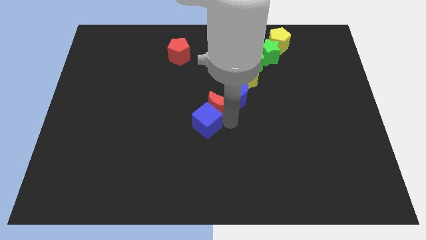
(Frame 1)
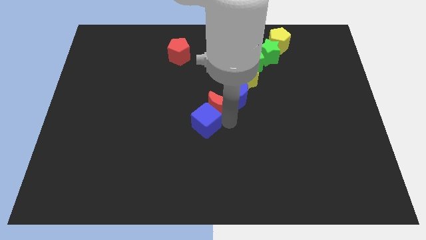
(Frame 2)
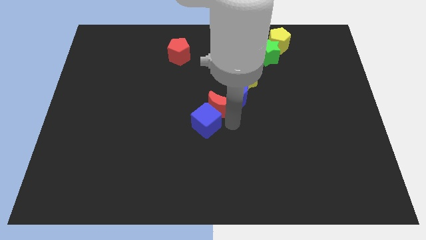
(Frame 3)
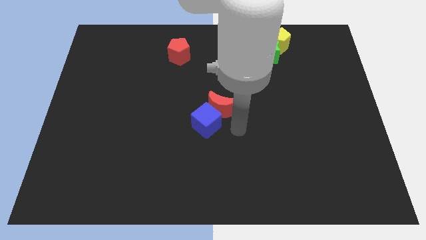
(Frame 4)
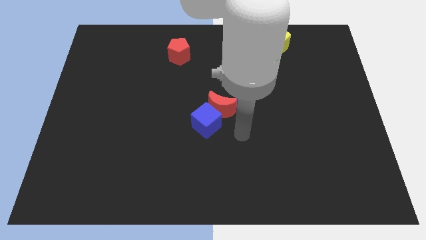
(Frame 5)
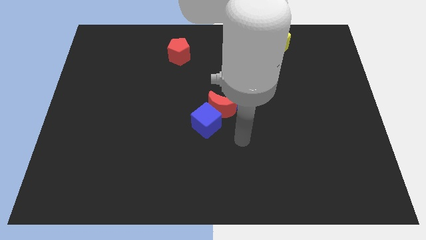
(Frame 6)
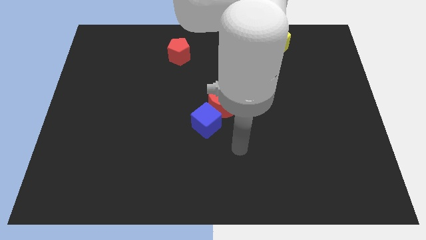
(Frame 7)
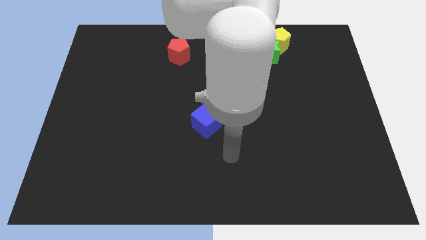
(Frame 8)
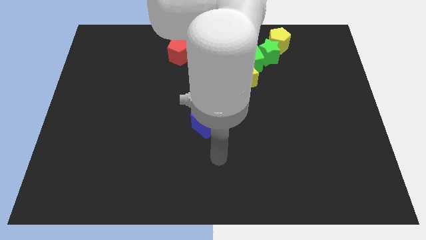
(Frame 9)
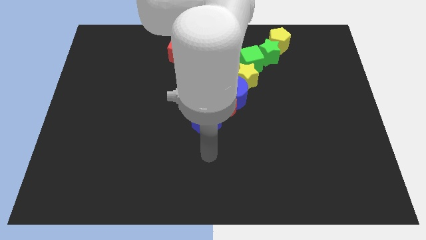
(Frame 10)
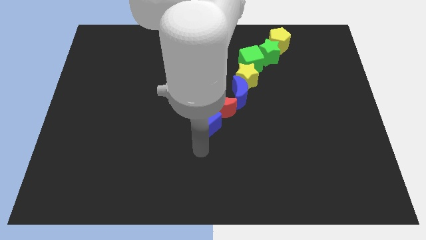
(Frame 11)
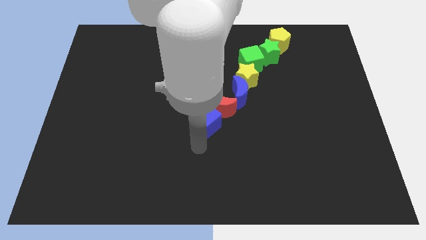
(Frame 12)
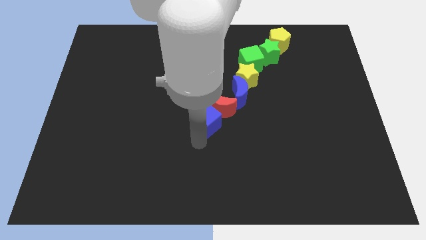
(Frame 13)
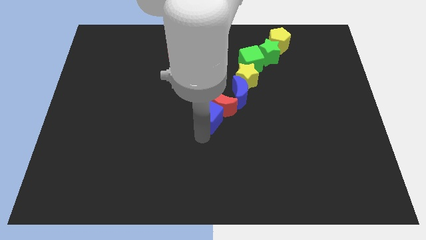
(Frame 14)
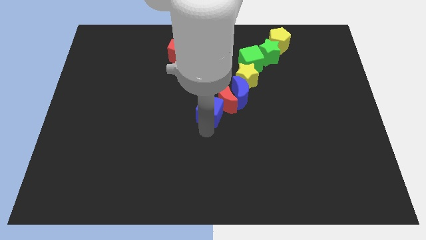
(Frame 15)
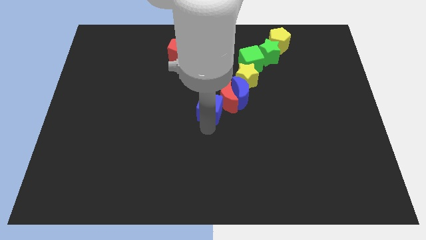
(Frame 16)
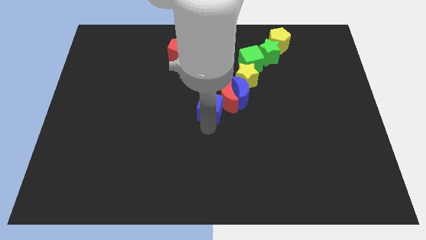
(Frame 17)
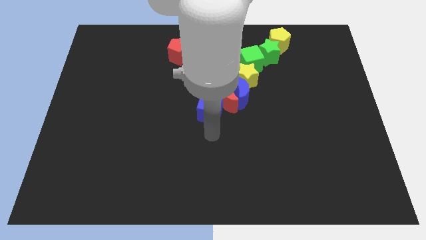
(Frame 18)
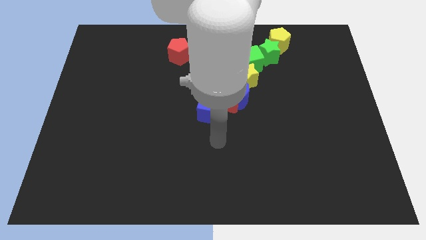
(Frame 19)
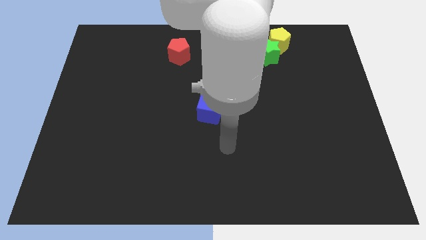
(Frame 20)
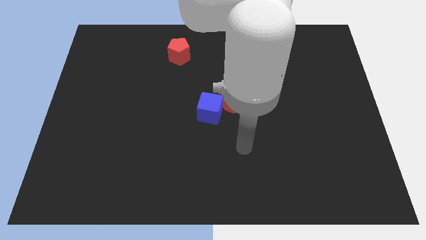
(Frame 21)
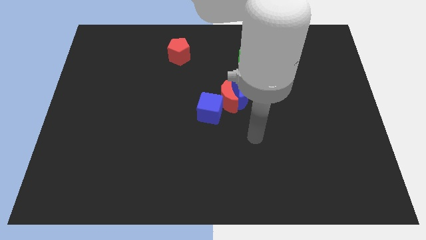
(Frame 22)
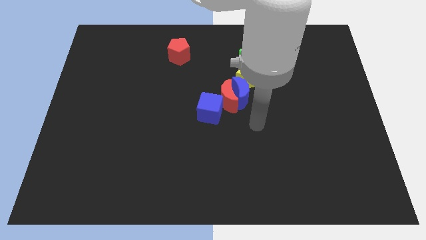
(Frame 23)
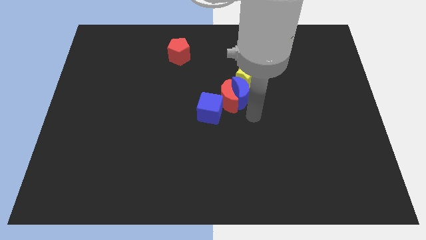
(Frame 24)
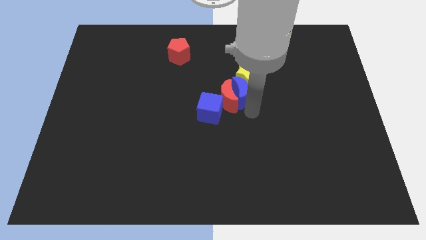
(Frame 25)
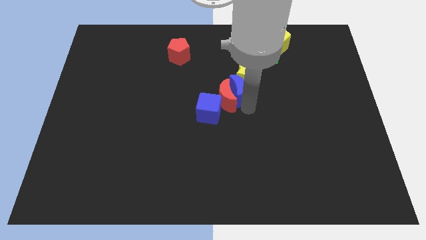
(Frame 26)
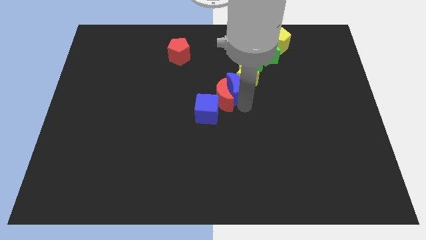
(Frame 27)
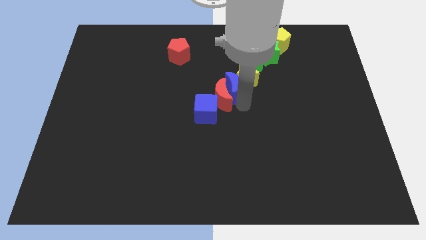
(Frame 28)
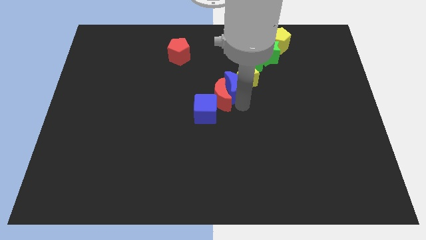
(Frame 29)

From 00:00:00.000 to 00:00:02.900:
push the blue cube into the red crescent

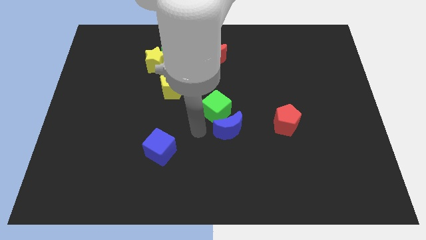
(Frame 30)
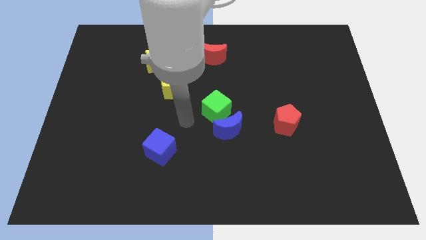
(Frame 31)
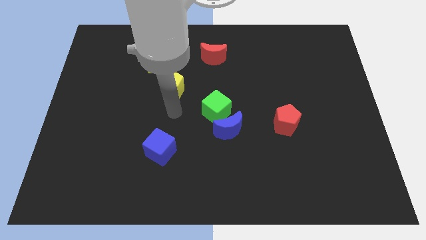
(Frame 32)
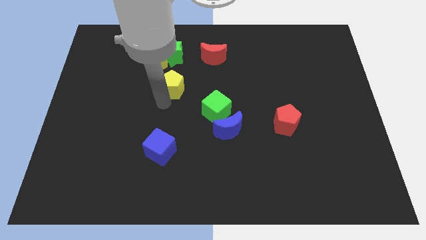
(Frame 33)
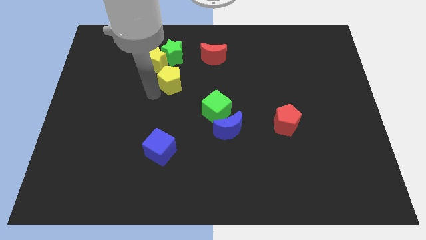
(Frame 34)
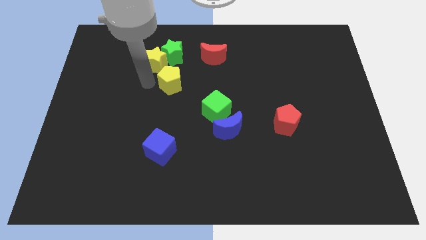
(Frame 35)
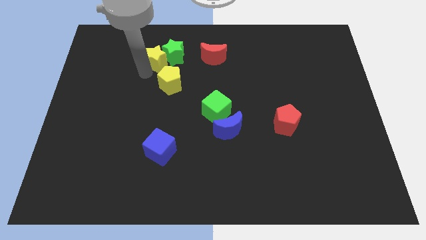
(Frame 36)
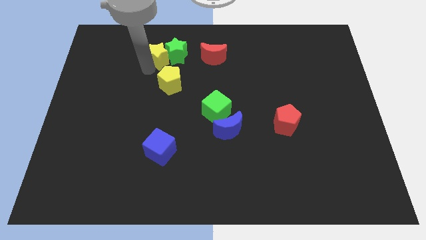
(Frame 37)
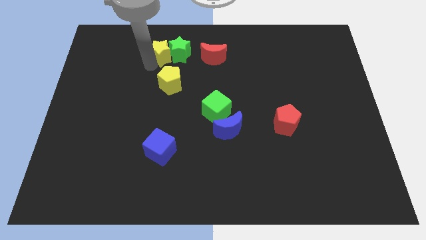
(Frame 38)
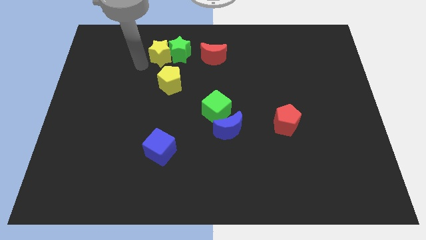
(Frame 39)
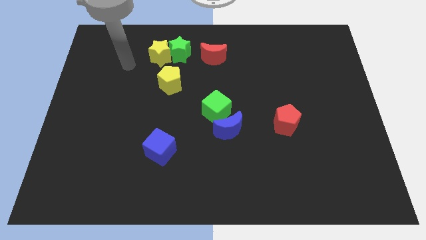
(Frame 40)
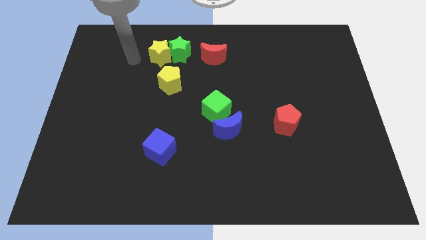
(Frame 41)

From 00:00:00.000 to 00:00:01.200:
move the group of stars slightly right

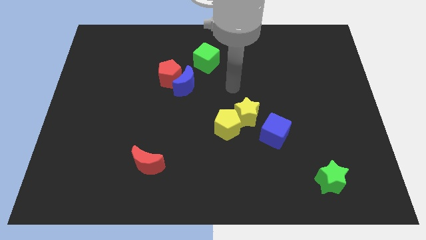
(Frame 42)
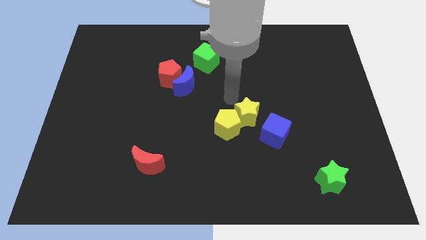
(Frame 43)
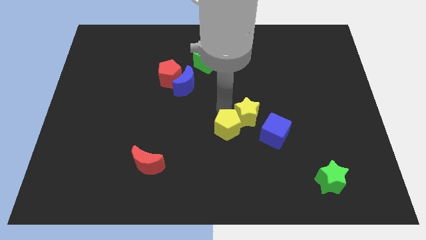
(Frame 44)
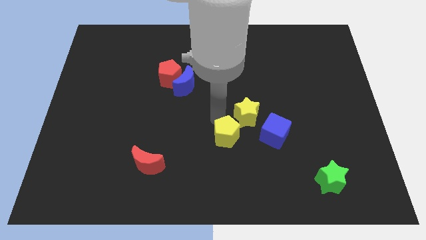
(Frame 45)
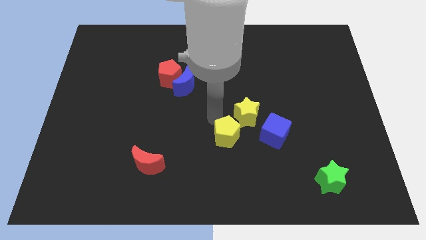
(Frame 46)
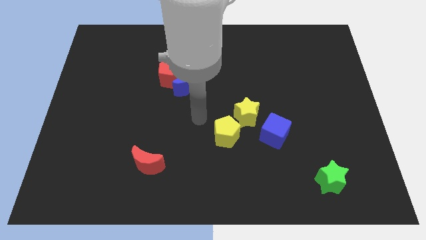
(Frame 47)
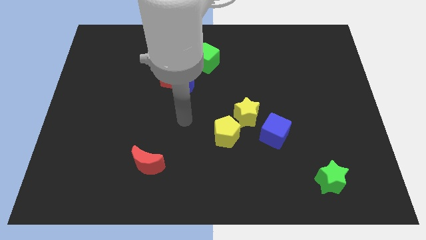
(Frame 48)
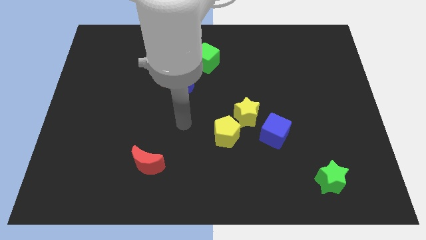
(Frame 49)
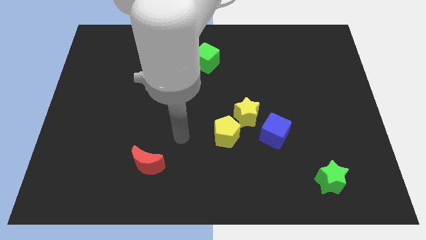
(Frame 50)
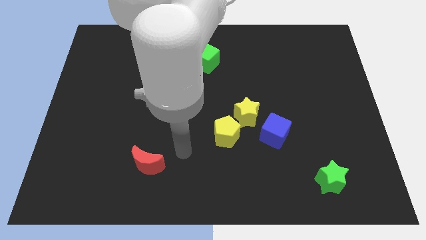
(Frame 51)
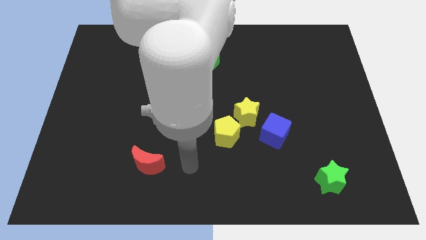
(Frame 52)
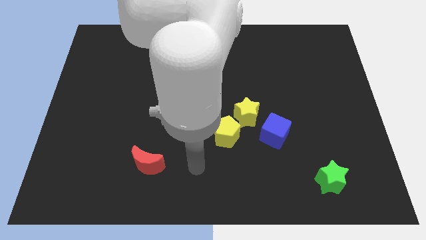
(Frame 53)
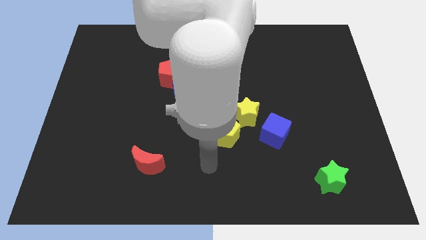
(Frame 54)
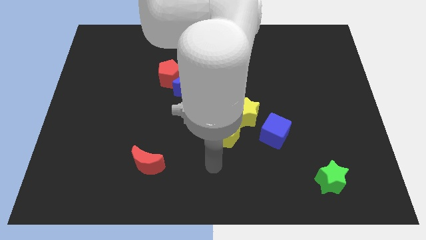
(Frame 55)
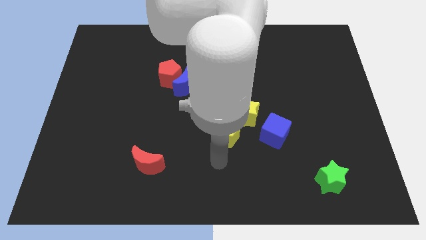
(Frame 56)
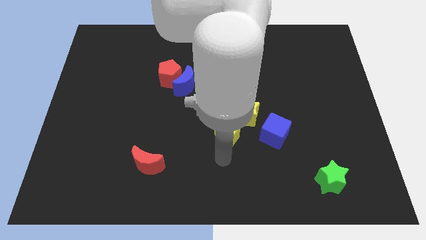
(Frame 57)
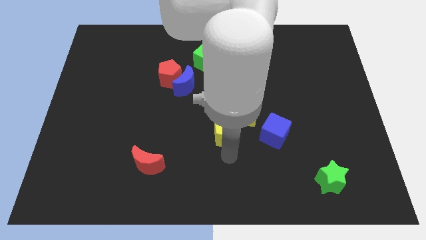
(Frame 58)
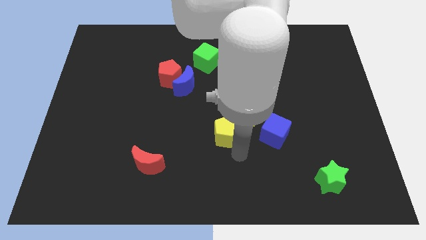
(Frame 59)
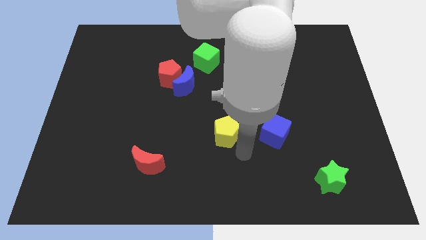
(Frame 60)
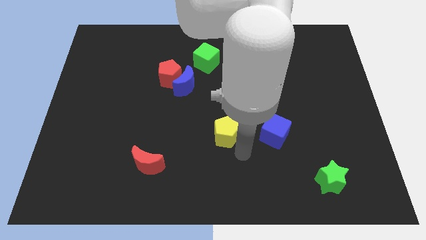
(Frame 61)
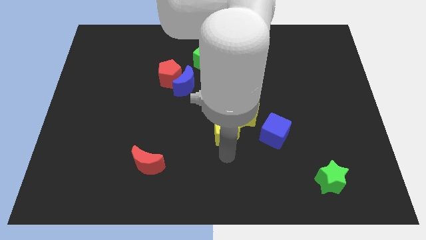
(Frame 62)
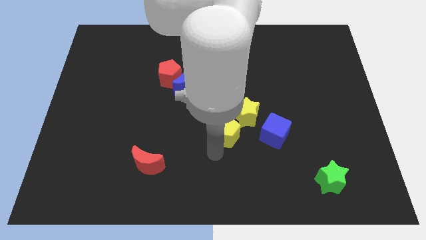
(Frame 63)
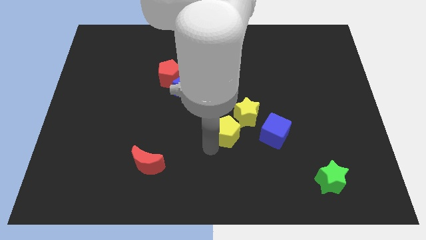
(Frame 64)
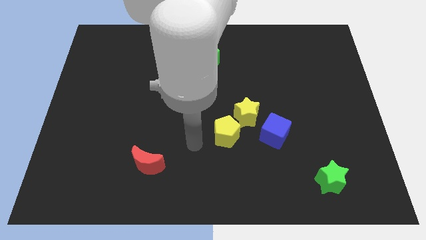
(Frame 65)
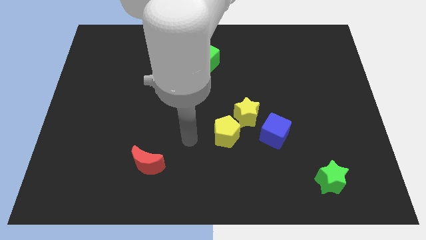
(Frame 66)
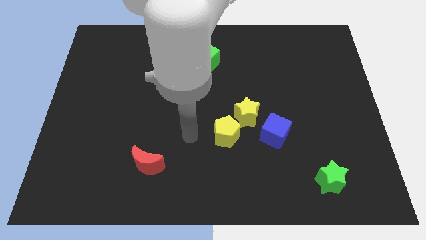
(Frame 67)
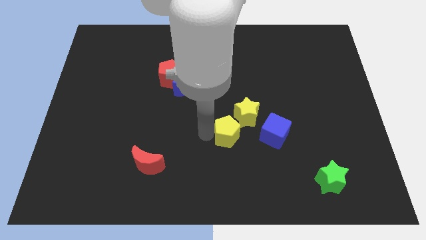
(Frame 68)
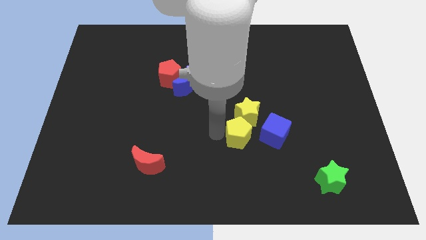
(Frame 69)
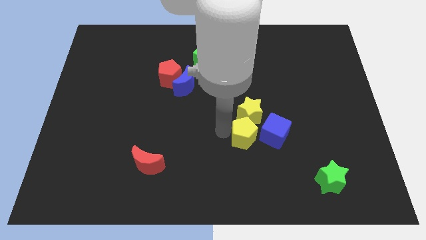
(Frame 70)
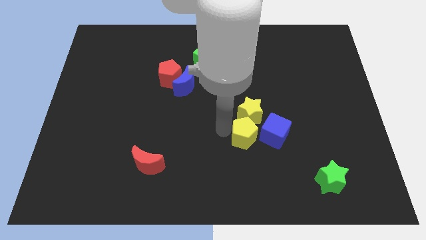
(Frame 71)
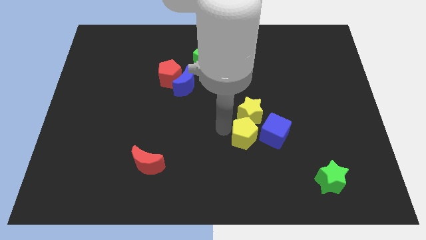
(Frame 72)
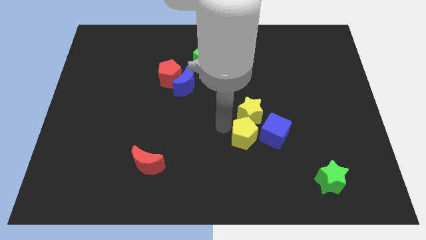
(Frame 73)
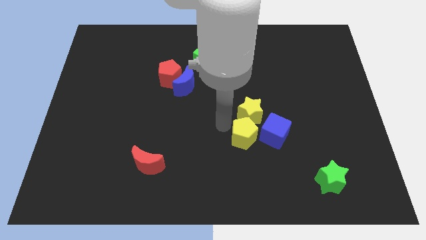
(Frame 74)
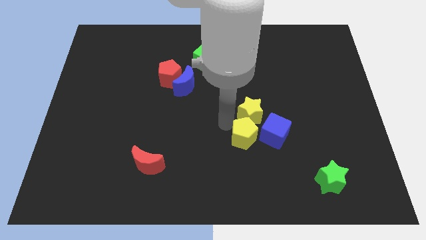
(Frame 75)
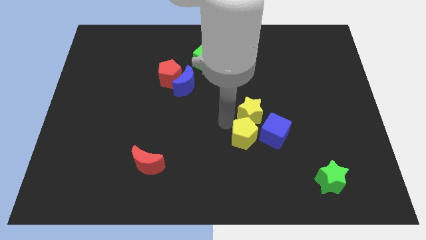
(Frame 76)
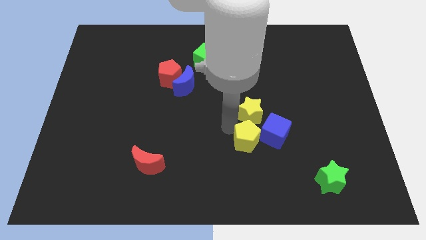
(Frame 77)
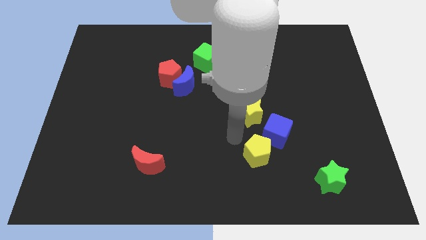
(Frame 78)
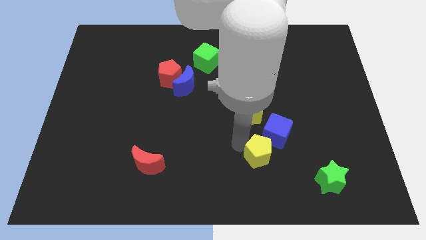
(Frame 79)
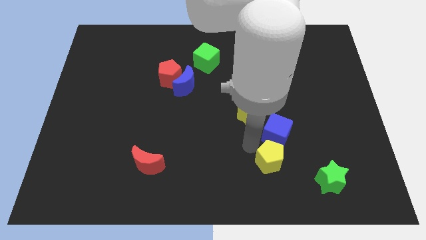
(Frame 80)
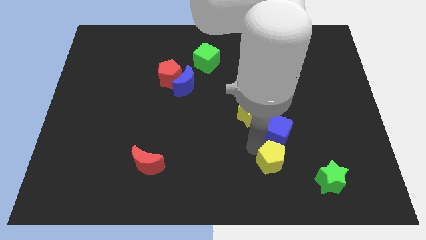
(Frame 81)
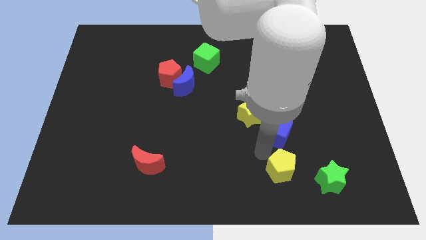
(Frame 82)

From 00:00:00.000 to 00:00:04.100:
separate the yellow pentagon from the yellow star

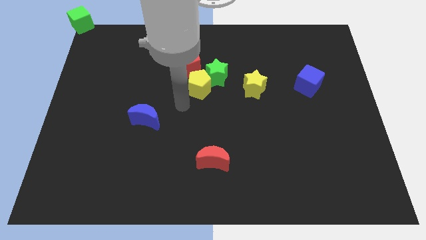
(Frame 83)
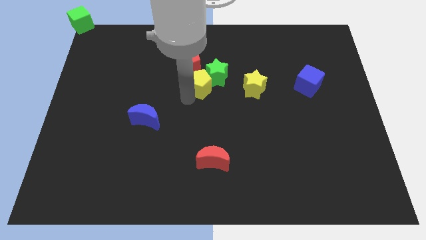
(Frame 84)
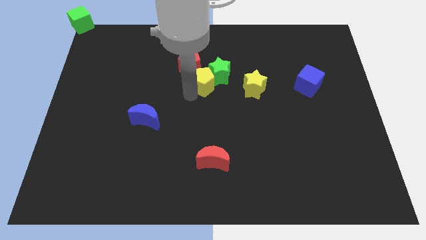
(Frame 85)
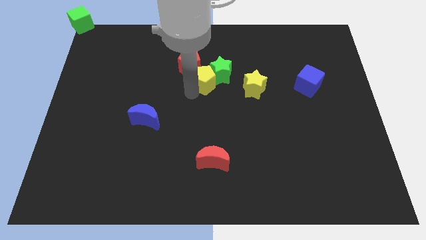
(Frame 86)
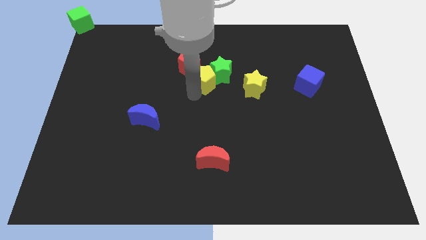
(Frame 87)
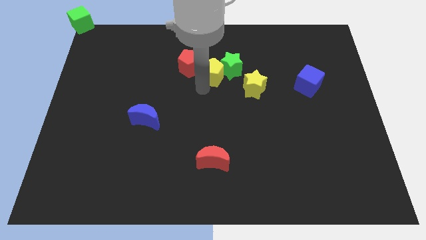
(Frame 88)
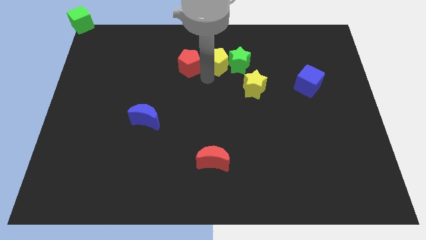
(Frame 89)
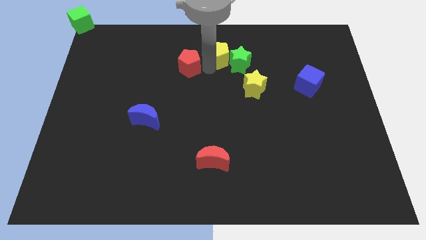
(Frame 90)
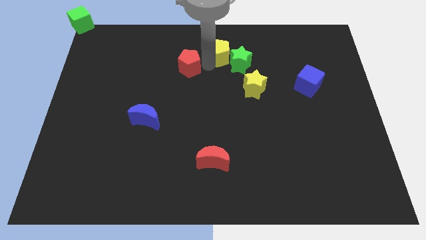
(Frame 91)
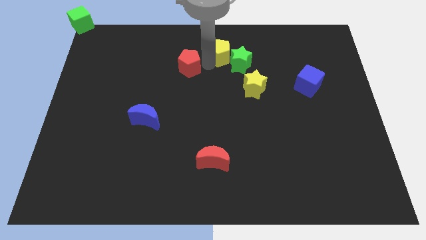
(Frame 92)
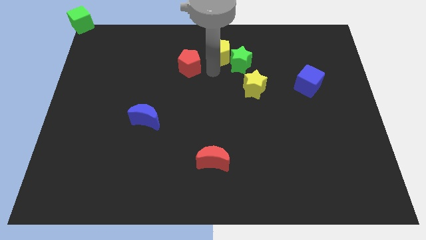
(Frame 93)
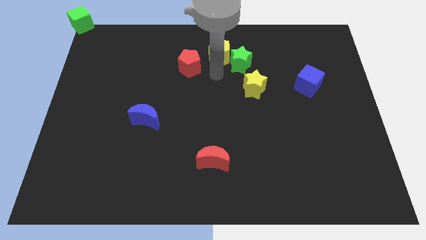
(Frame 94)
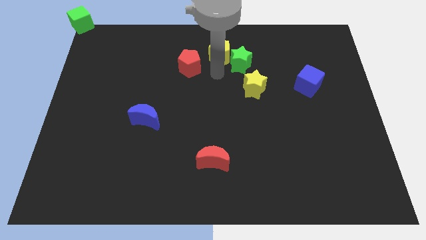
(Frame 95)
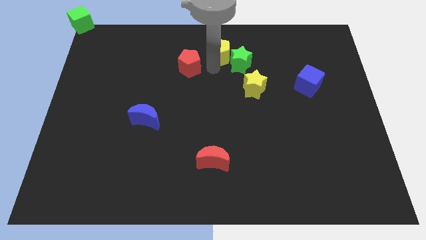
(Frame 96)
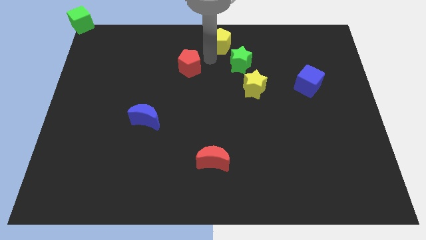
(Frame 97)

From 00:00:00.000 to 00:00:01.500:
push the green star with the yellow pentagon towards the top center
